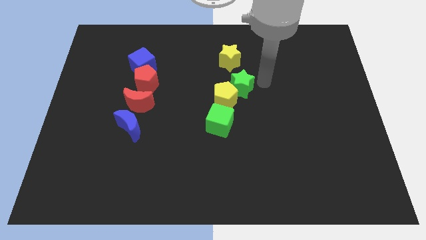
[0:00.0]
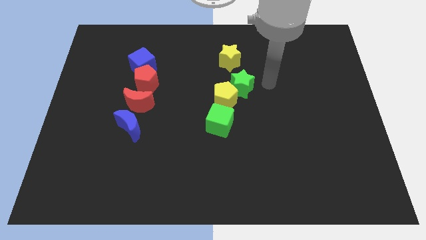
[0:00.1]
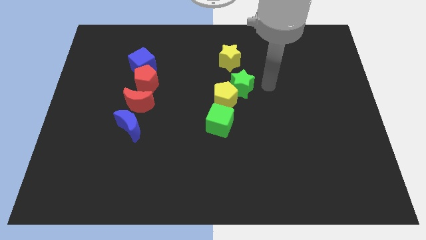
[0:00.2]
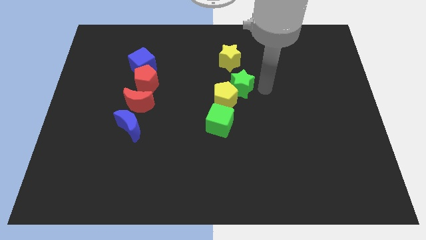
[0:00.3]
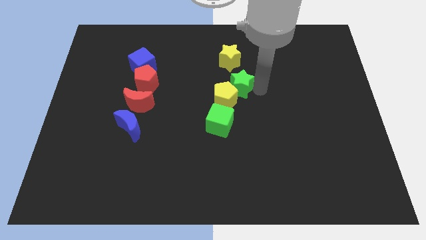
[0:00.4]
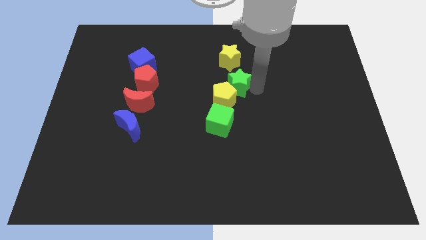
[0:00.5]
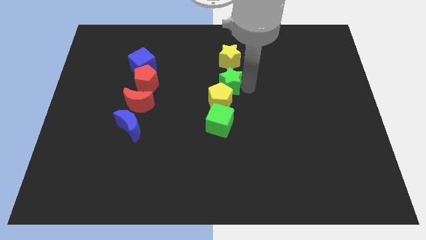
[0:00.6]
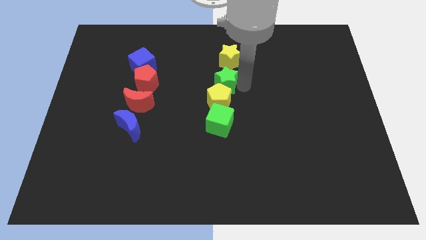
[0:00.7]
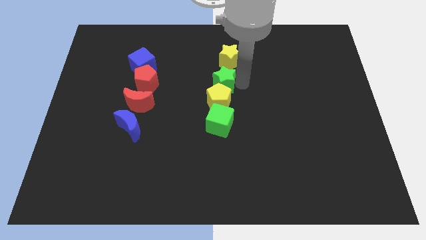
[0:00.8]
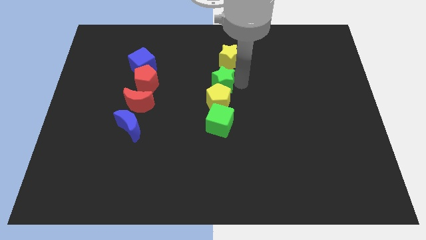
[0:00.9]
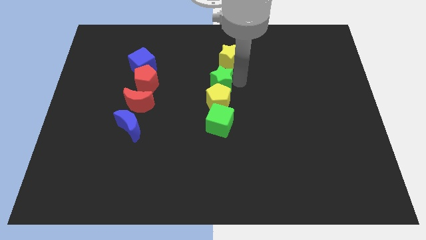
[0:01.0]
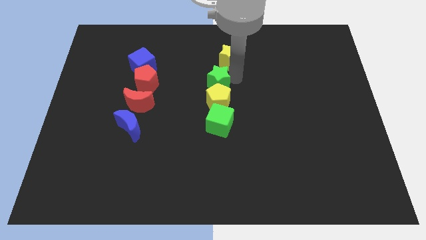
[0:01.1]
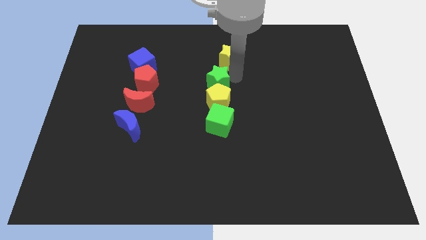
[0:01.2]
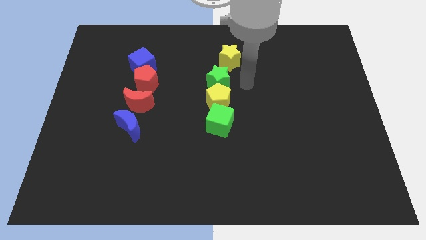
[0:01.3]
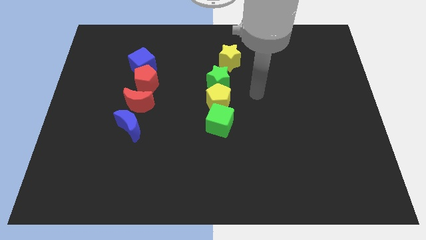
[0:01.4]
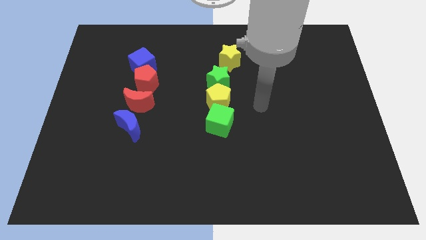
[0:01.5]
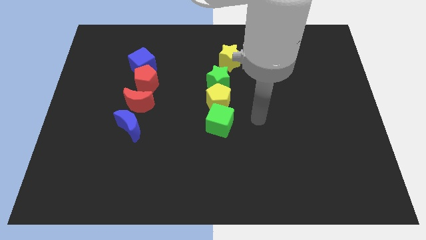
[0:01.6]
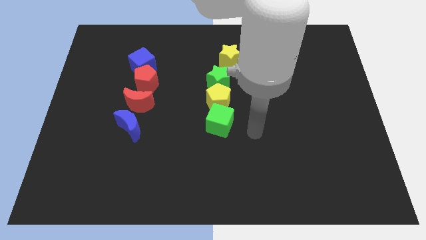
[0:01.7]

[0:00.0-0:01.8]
push the green star in between yellow star and yellow pentagon

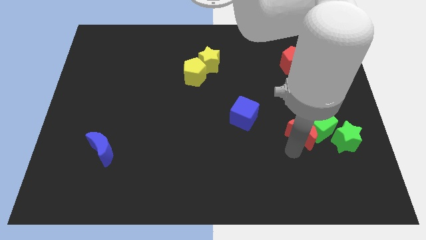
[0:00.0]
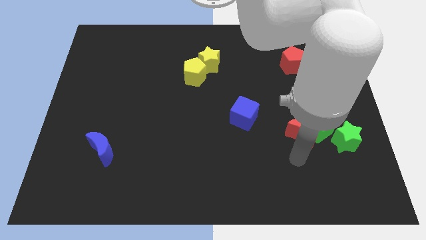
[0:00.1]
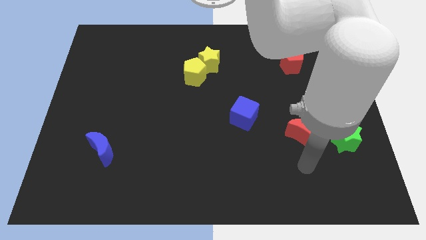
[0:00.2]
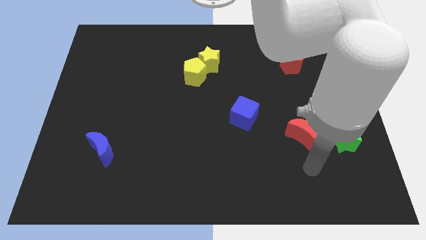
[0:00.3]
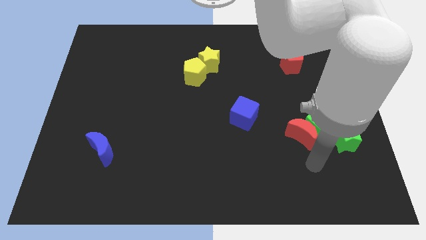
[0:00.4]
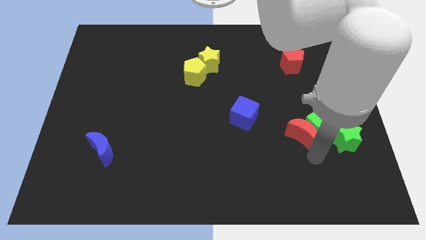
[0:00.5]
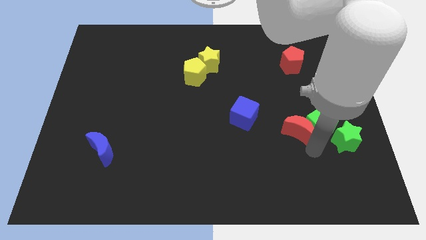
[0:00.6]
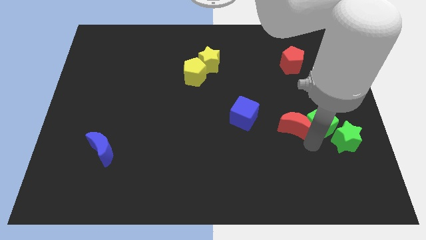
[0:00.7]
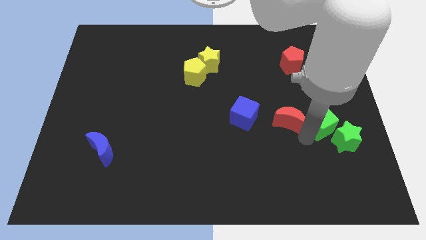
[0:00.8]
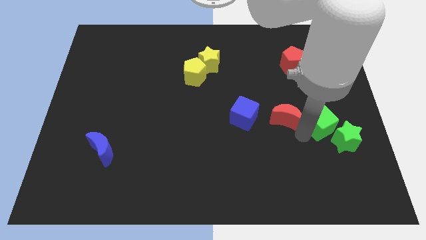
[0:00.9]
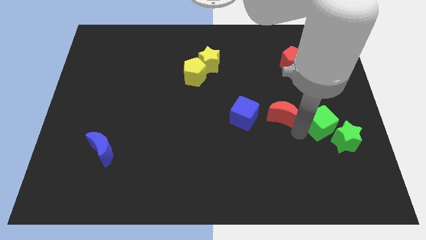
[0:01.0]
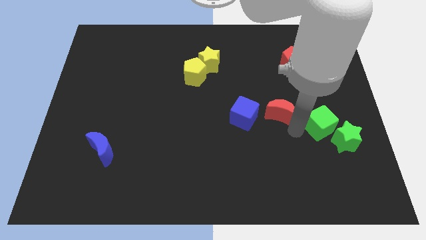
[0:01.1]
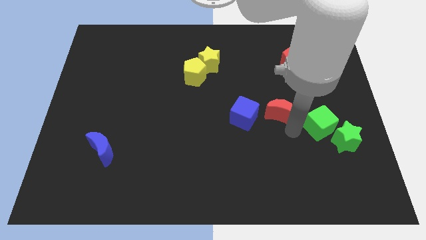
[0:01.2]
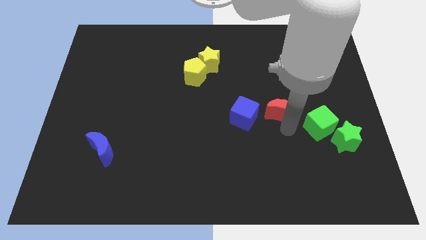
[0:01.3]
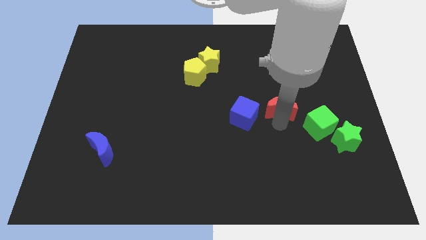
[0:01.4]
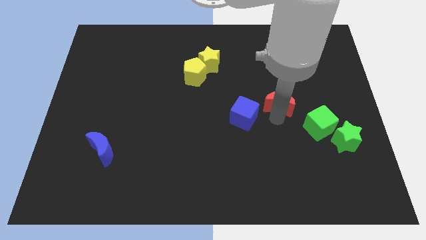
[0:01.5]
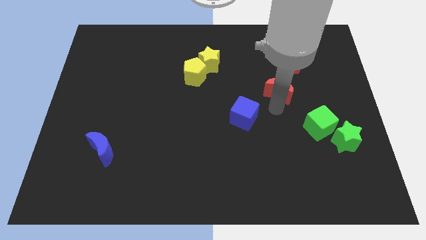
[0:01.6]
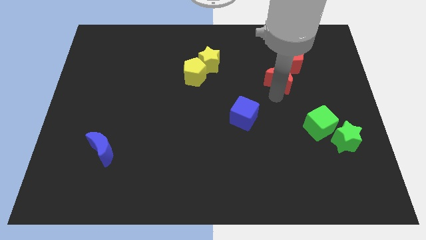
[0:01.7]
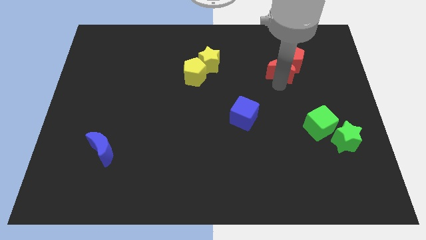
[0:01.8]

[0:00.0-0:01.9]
separate the red moon from the green cube

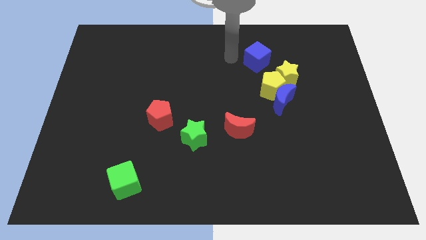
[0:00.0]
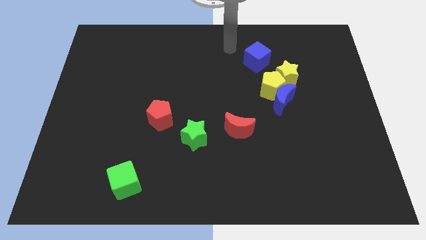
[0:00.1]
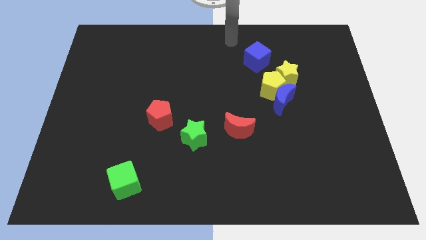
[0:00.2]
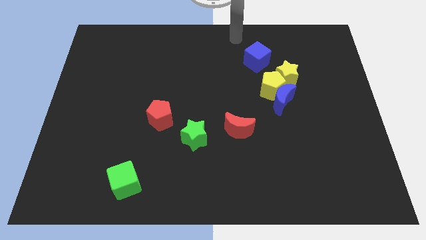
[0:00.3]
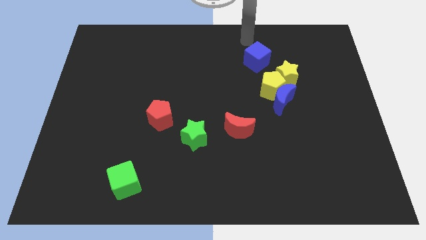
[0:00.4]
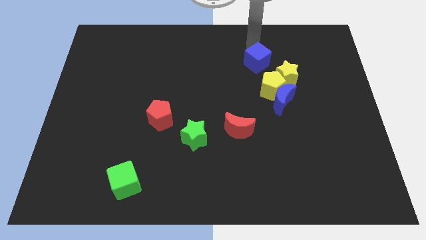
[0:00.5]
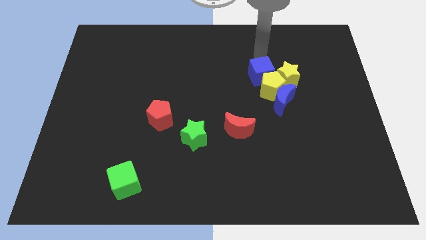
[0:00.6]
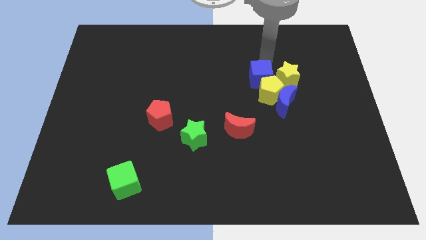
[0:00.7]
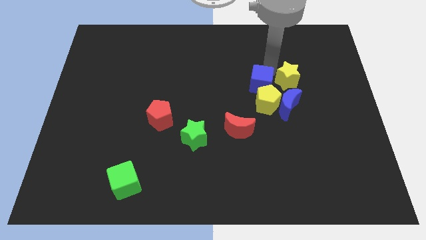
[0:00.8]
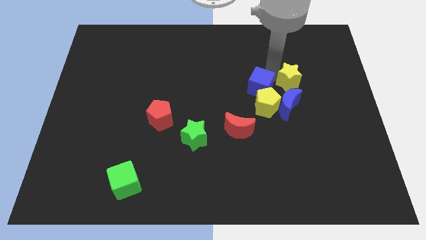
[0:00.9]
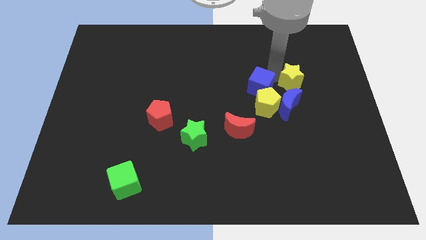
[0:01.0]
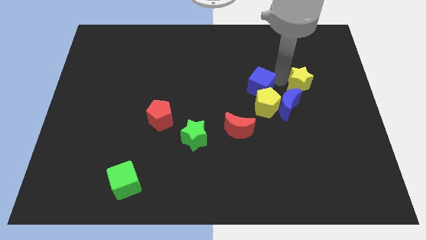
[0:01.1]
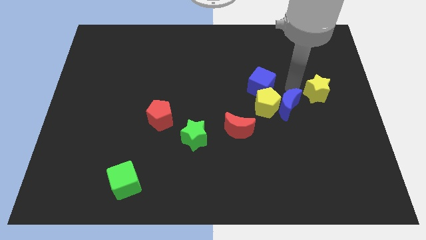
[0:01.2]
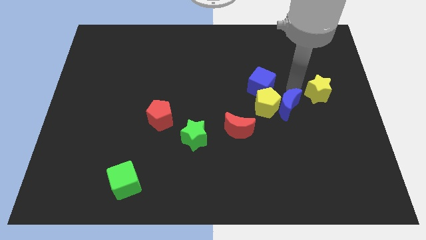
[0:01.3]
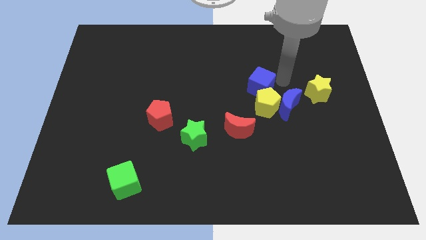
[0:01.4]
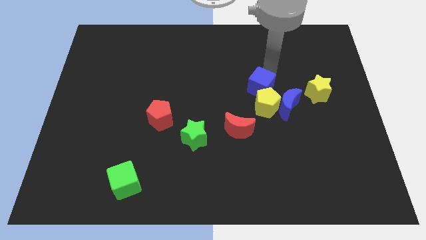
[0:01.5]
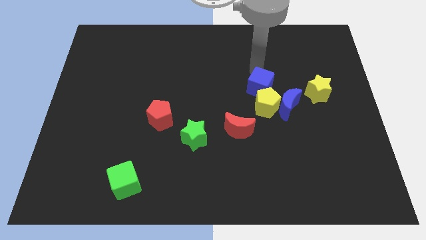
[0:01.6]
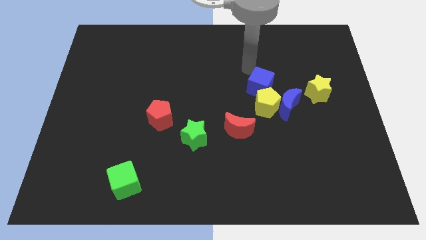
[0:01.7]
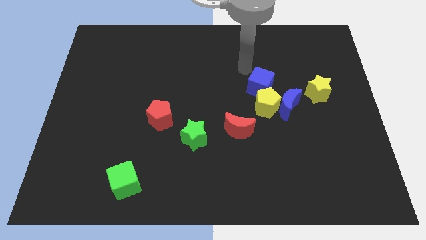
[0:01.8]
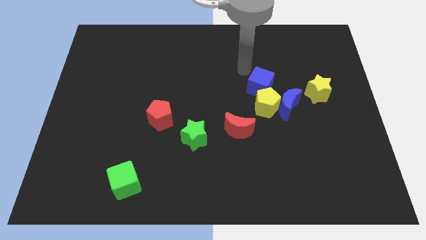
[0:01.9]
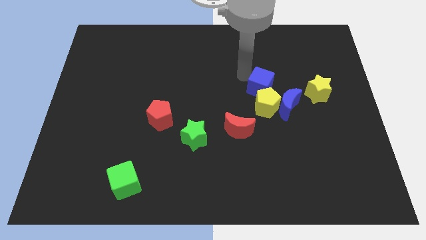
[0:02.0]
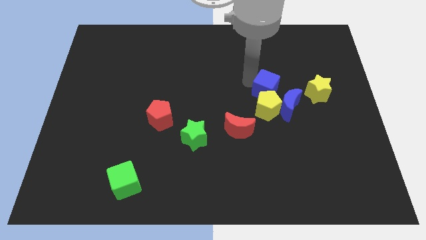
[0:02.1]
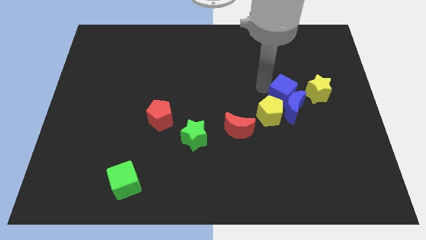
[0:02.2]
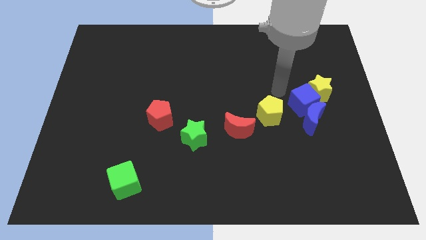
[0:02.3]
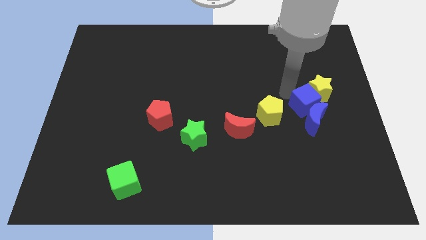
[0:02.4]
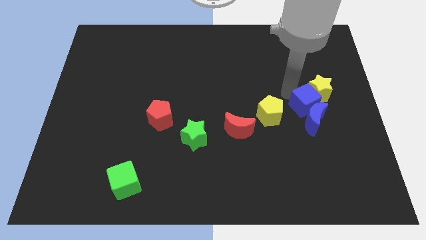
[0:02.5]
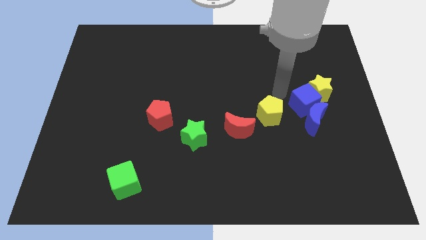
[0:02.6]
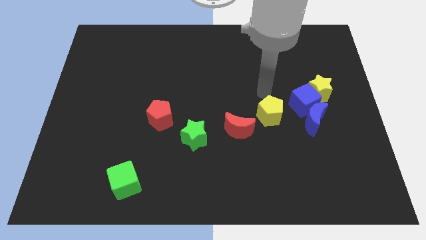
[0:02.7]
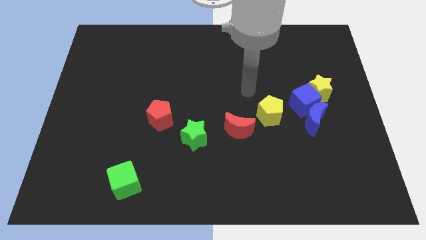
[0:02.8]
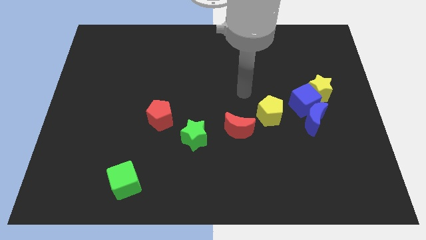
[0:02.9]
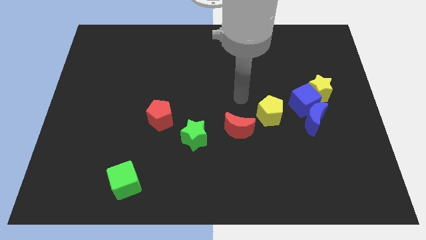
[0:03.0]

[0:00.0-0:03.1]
push blue cube into blue moon

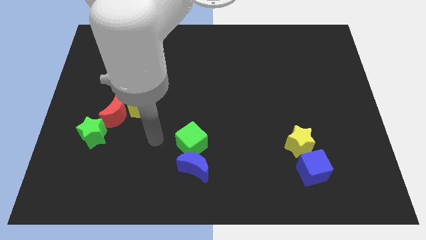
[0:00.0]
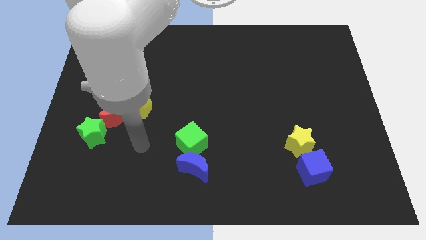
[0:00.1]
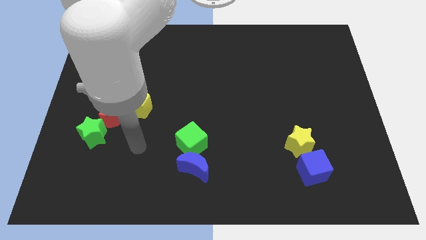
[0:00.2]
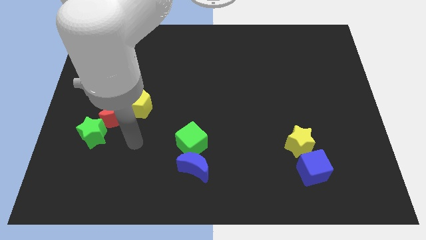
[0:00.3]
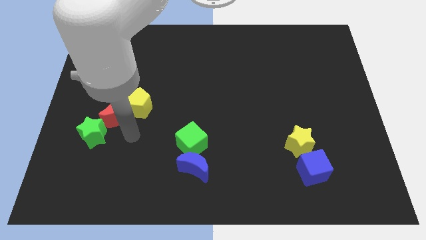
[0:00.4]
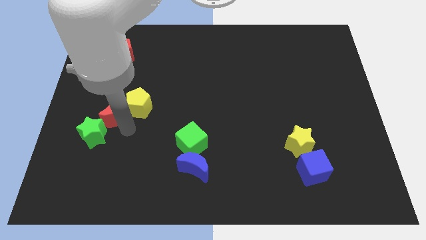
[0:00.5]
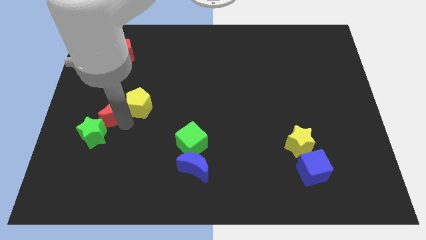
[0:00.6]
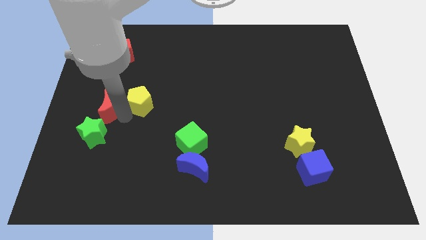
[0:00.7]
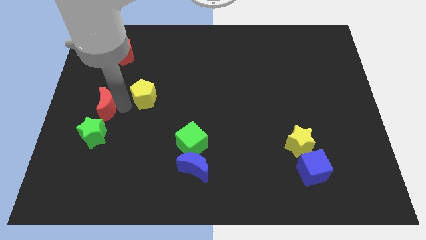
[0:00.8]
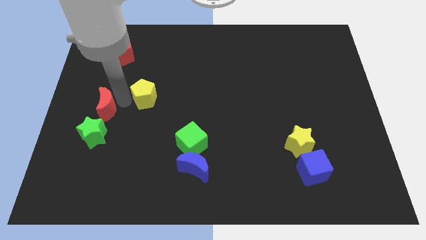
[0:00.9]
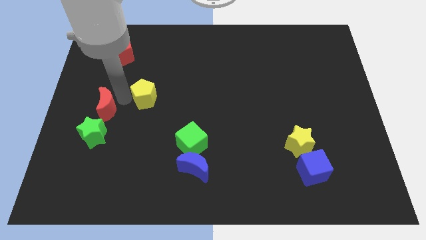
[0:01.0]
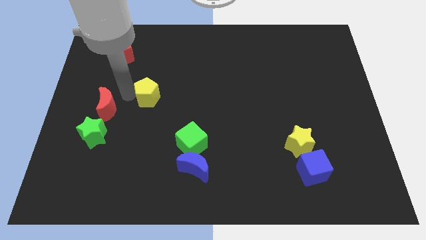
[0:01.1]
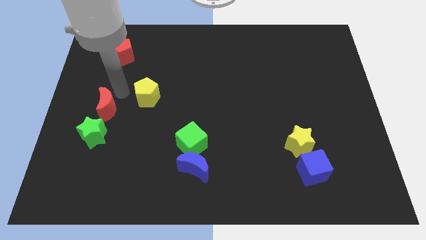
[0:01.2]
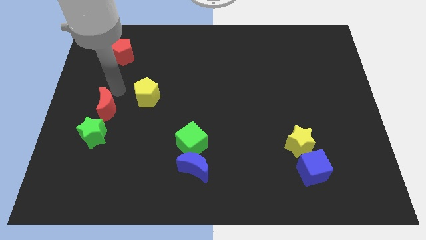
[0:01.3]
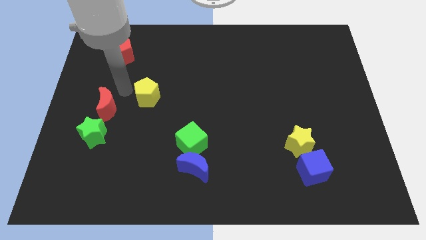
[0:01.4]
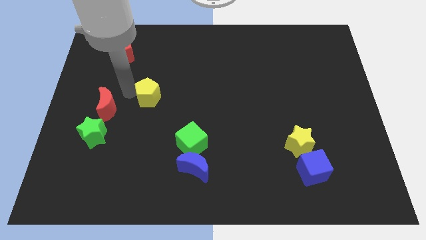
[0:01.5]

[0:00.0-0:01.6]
separate the yellow pentagon and red crescent

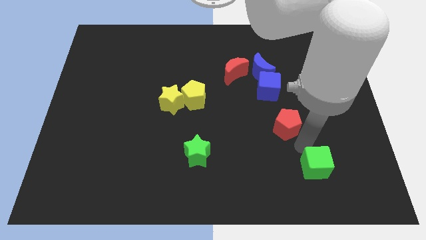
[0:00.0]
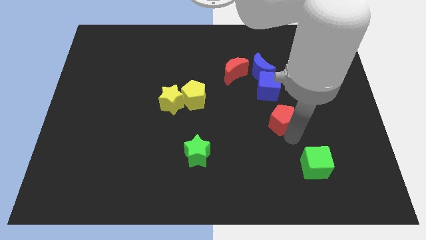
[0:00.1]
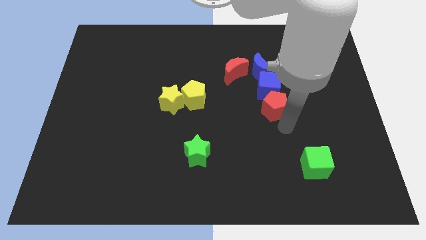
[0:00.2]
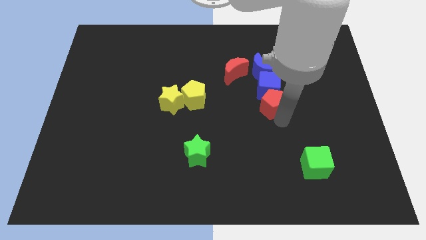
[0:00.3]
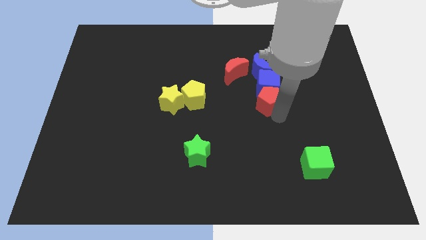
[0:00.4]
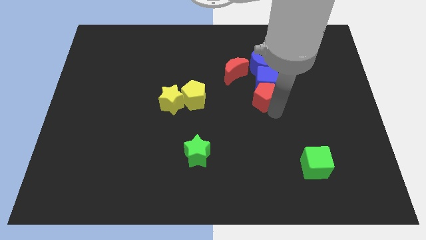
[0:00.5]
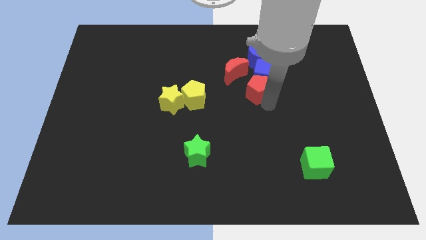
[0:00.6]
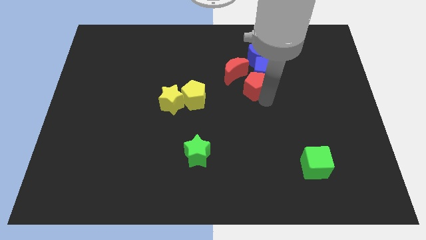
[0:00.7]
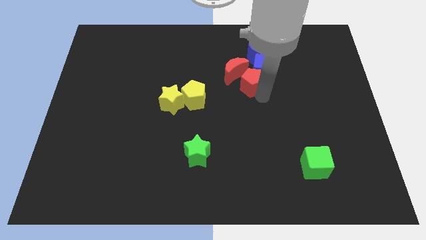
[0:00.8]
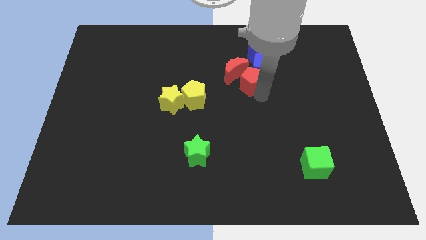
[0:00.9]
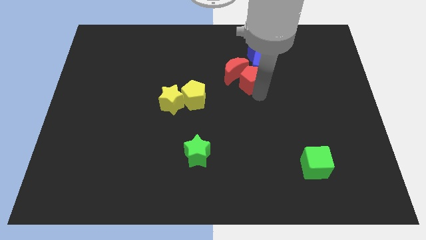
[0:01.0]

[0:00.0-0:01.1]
place the red pentagon below the red crescent
